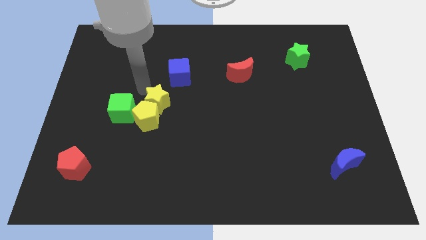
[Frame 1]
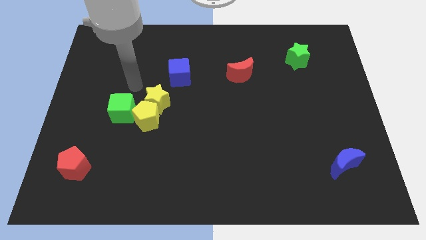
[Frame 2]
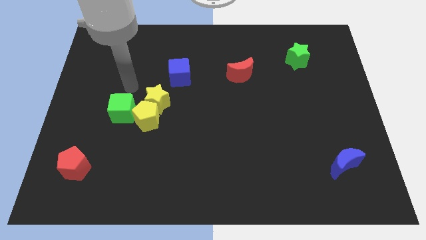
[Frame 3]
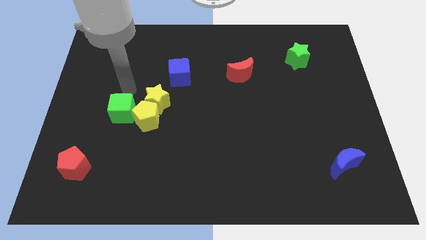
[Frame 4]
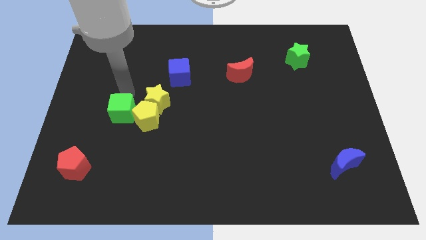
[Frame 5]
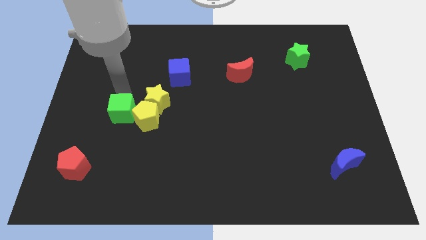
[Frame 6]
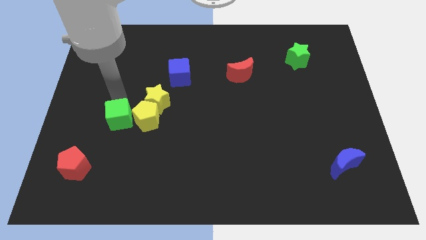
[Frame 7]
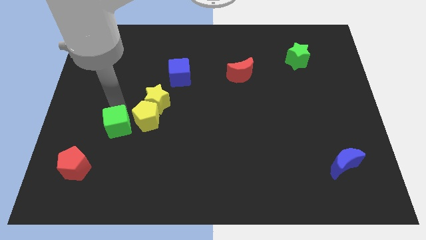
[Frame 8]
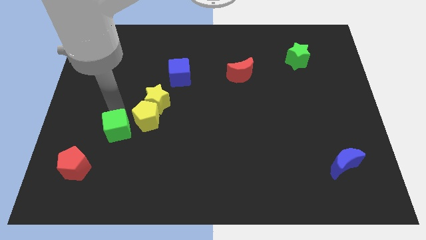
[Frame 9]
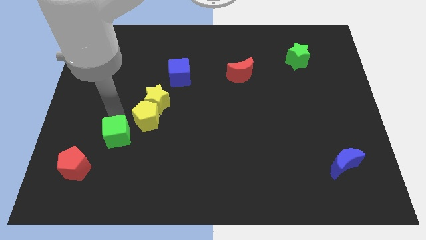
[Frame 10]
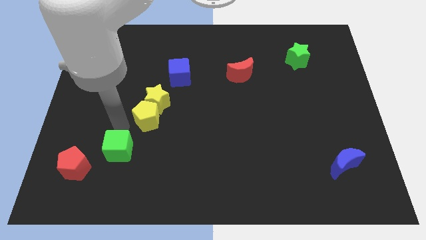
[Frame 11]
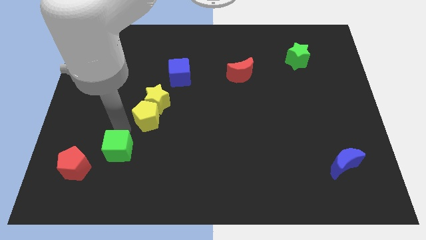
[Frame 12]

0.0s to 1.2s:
place the green cube at the bottom left side of yellow pentagon

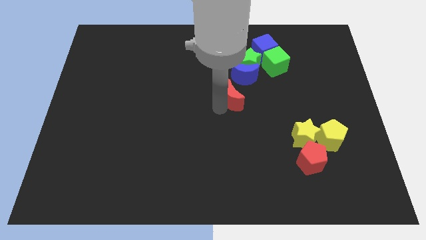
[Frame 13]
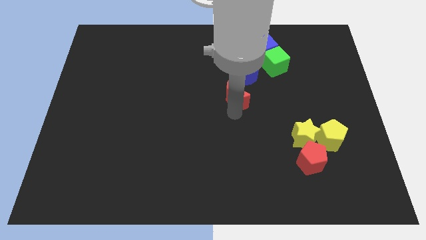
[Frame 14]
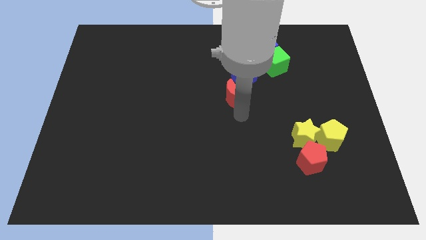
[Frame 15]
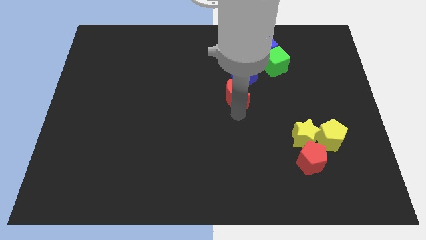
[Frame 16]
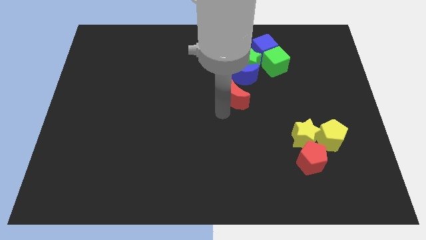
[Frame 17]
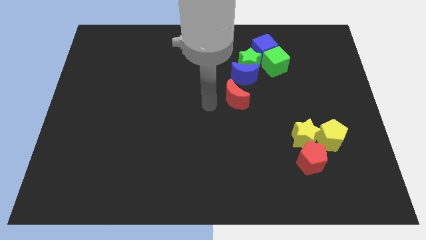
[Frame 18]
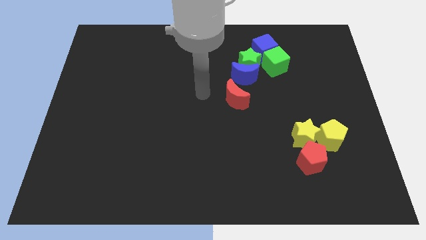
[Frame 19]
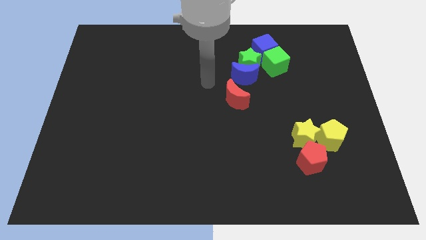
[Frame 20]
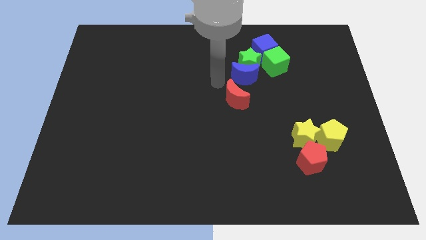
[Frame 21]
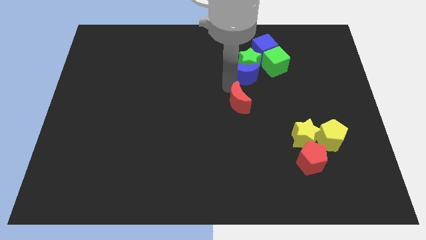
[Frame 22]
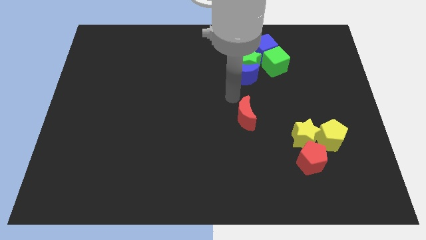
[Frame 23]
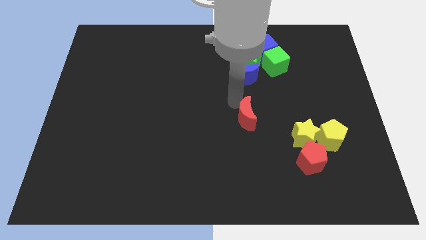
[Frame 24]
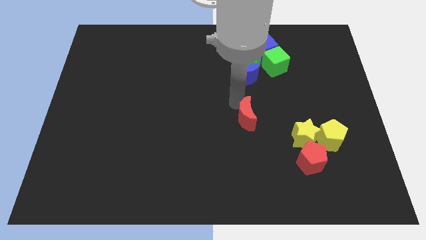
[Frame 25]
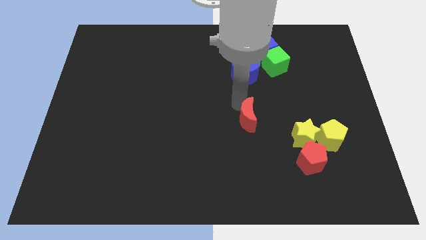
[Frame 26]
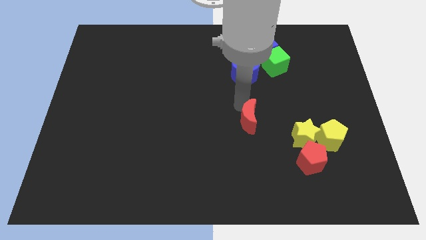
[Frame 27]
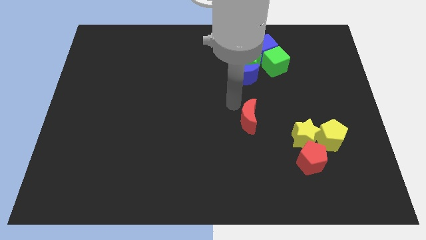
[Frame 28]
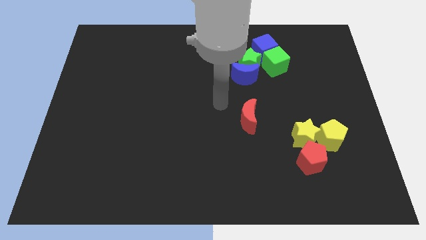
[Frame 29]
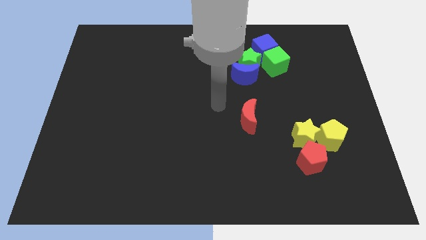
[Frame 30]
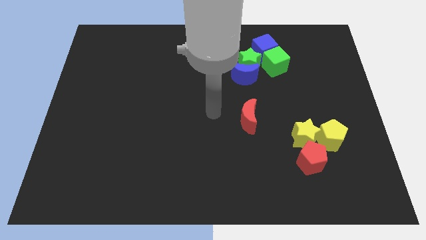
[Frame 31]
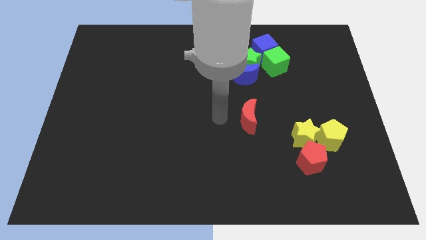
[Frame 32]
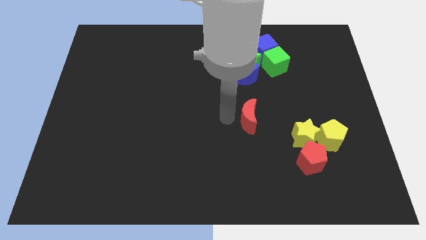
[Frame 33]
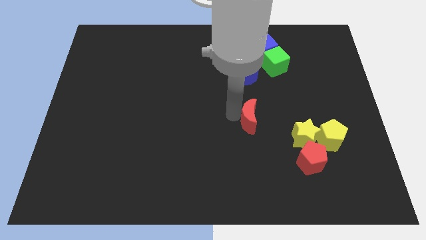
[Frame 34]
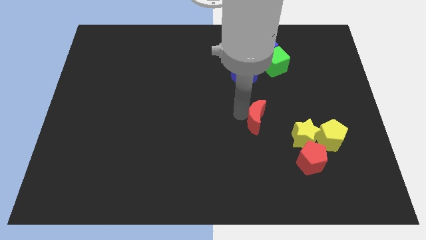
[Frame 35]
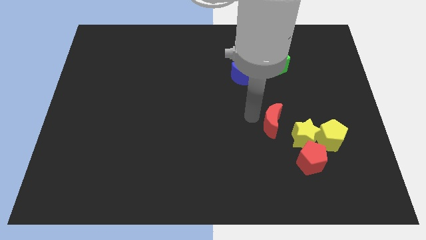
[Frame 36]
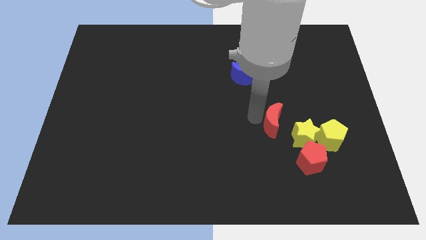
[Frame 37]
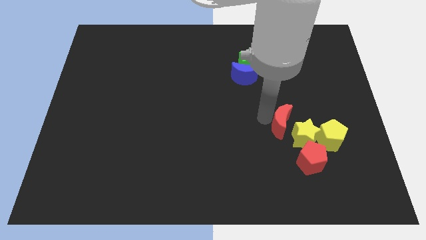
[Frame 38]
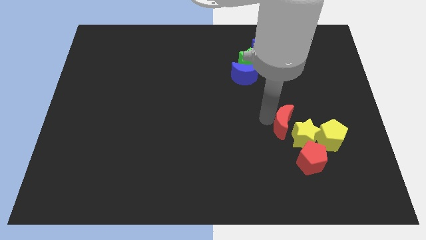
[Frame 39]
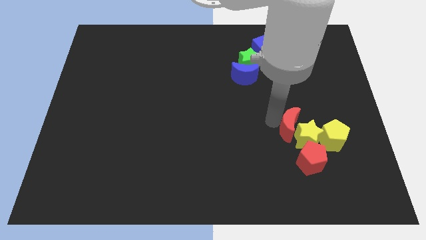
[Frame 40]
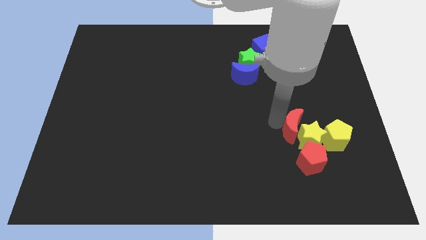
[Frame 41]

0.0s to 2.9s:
move red moon into group of blocks

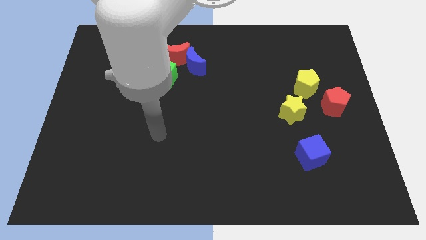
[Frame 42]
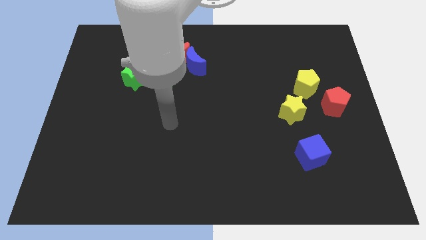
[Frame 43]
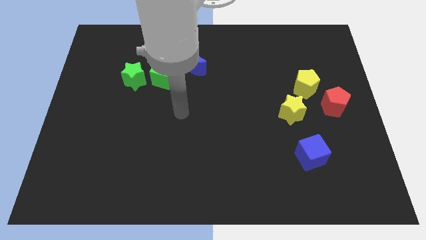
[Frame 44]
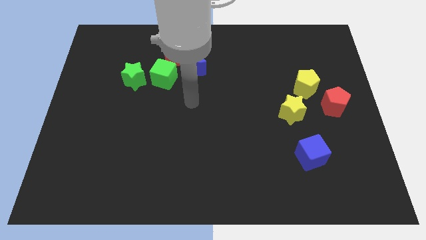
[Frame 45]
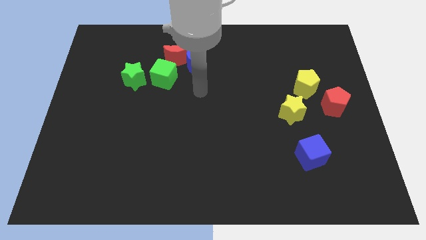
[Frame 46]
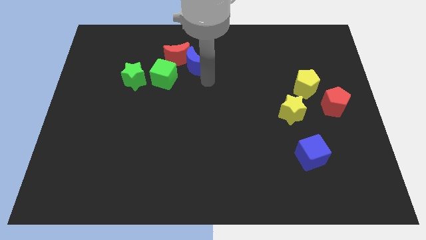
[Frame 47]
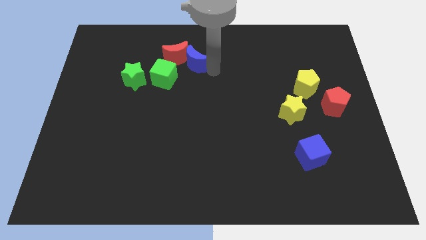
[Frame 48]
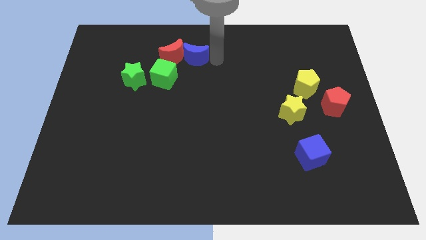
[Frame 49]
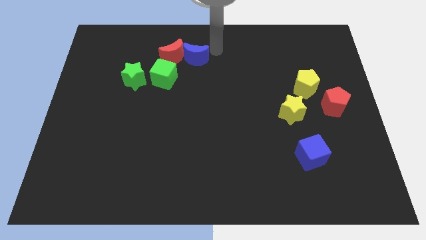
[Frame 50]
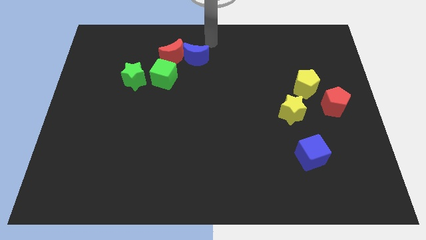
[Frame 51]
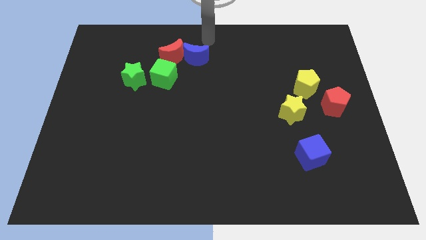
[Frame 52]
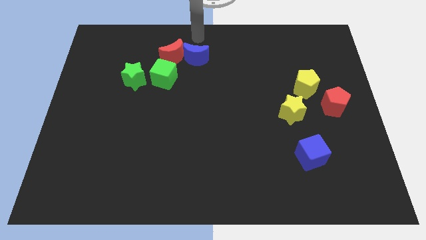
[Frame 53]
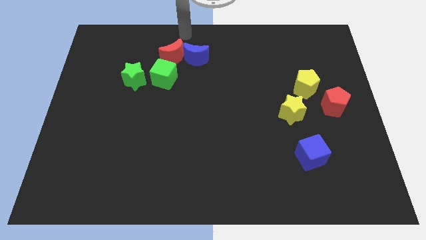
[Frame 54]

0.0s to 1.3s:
touch the blue crescent

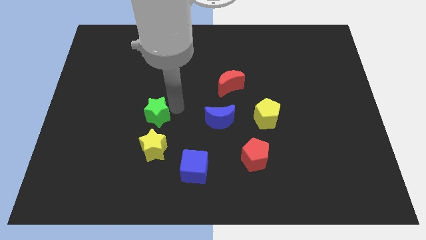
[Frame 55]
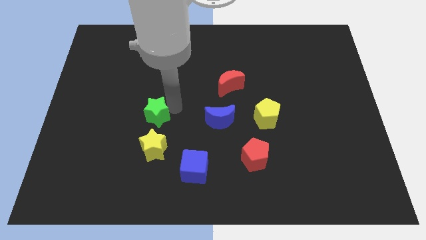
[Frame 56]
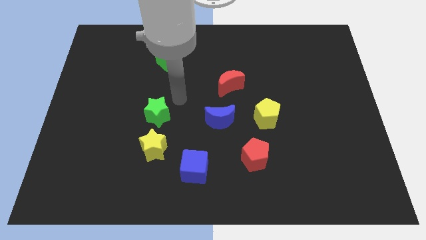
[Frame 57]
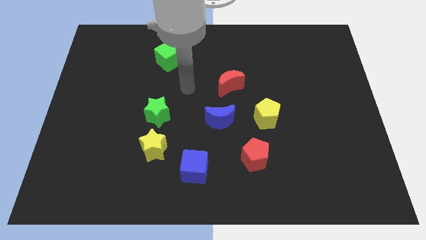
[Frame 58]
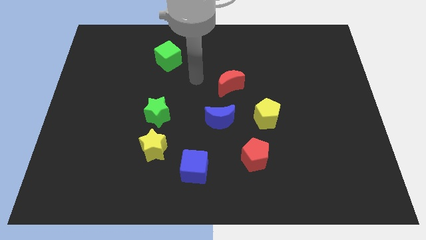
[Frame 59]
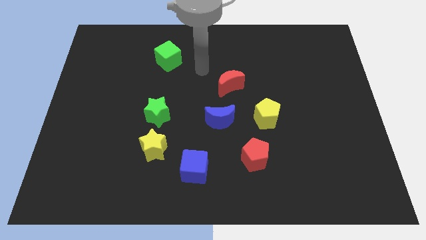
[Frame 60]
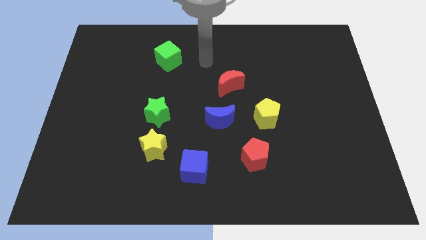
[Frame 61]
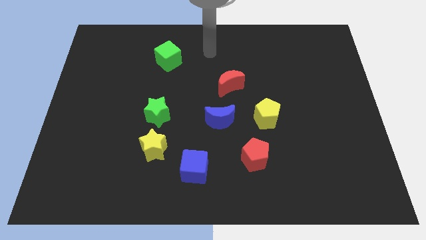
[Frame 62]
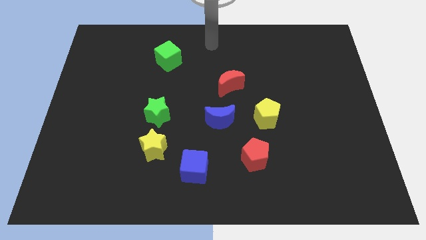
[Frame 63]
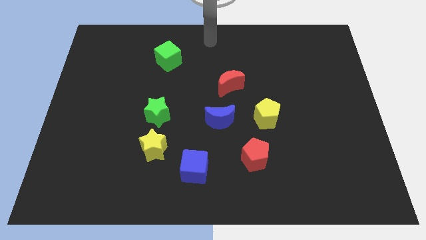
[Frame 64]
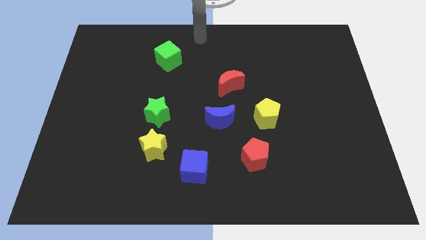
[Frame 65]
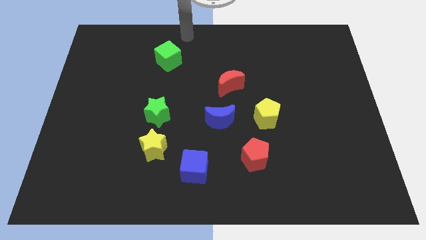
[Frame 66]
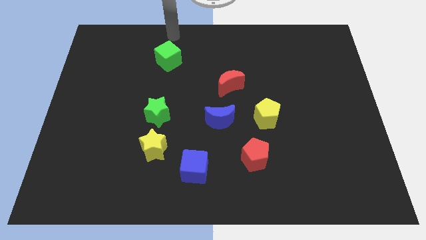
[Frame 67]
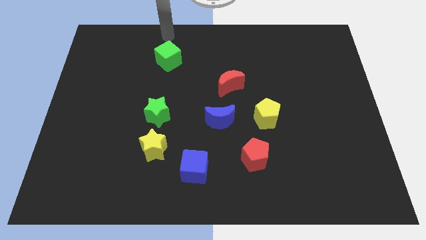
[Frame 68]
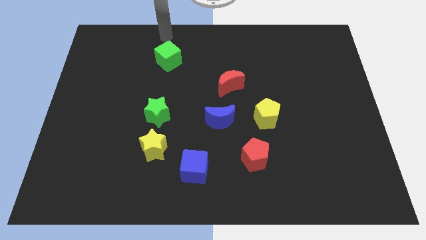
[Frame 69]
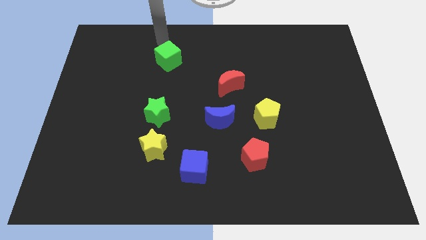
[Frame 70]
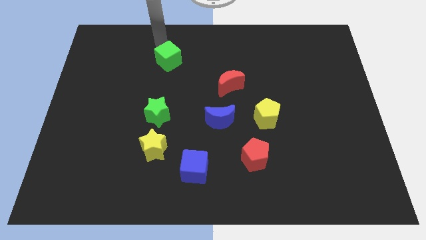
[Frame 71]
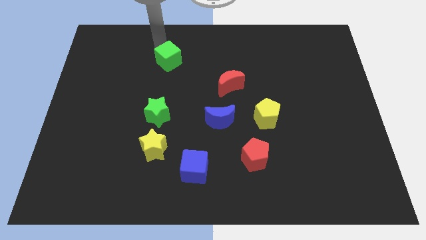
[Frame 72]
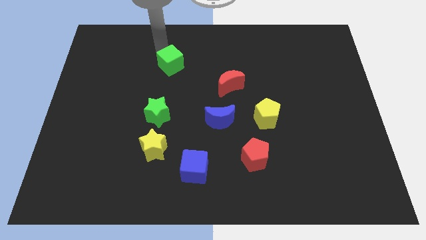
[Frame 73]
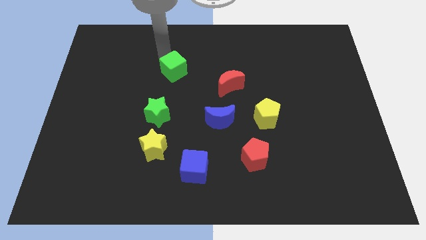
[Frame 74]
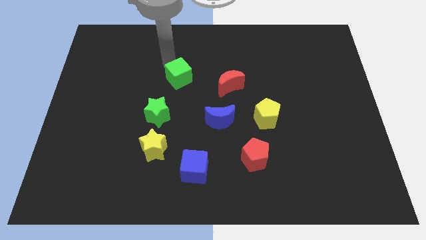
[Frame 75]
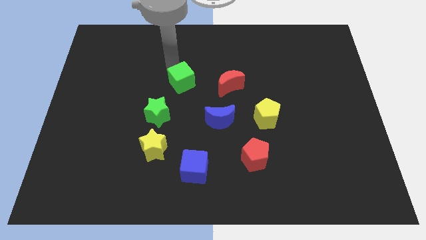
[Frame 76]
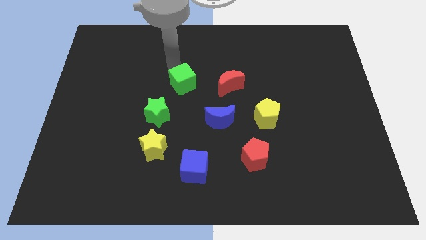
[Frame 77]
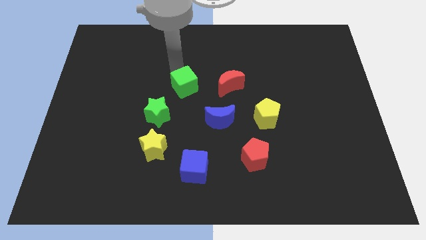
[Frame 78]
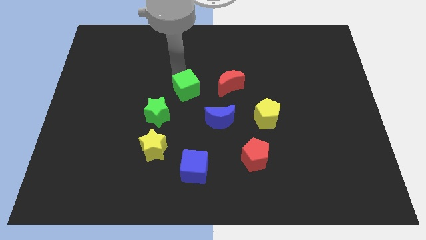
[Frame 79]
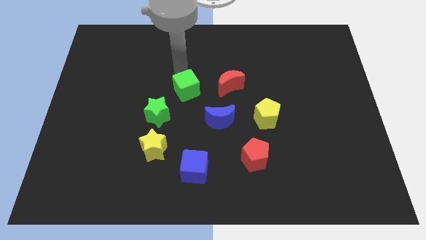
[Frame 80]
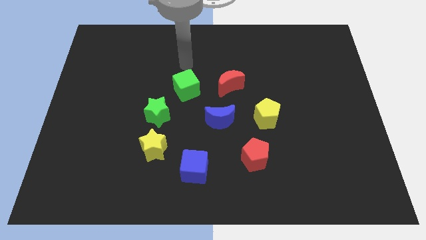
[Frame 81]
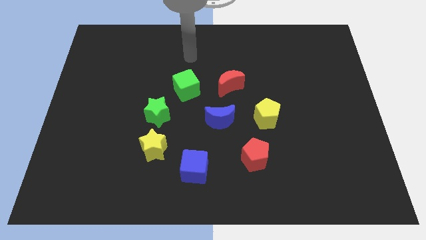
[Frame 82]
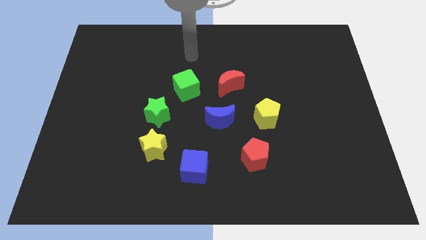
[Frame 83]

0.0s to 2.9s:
push the green cube towards the blue crescent

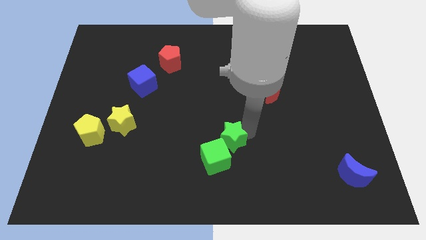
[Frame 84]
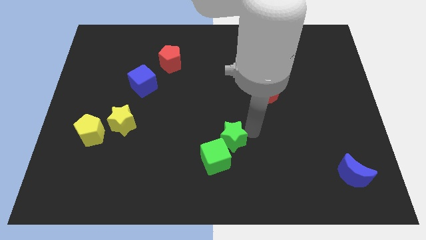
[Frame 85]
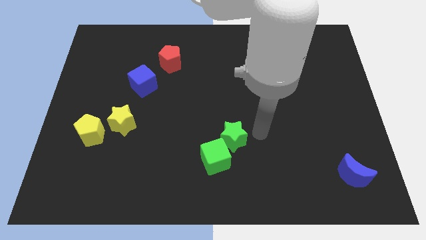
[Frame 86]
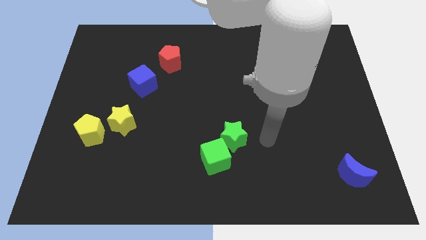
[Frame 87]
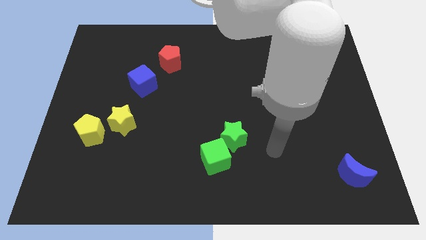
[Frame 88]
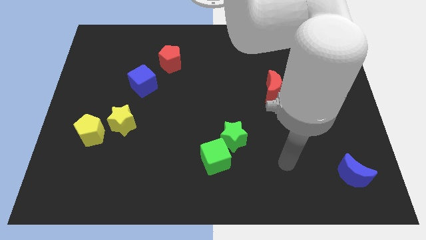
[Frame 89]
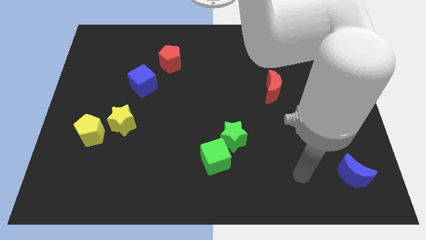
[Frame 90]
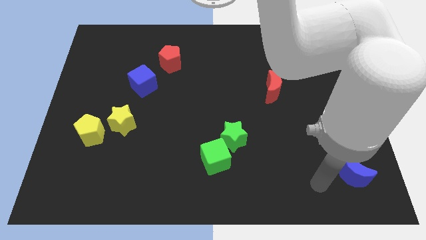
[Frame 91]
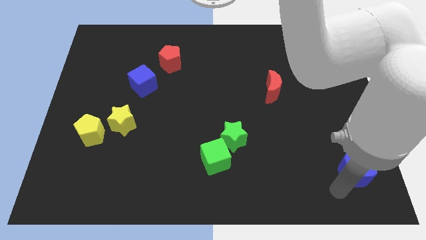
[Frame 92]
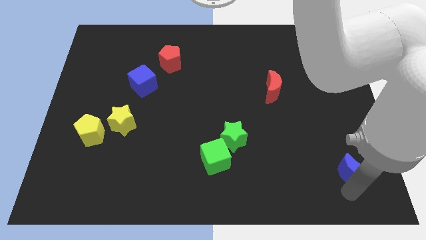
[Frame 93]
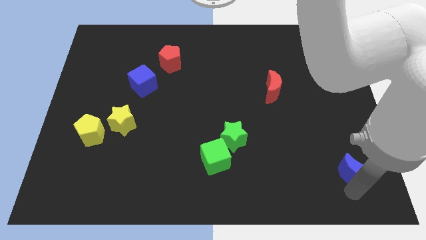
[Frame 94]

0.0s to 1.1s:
place the arm down to the blue moon
